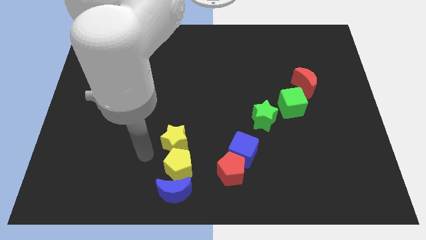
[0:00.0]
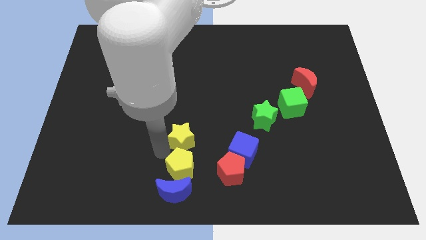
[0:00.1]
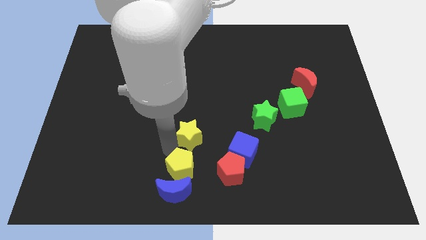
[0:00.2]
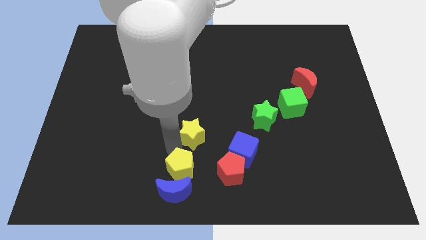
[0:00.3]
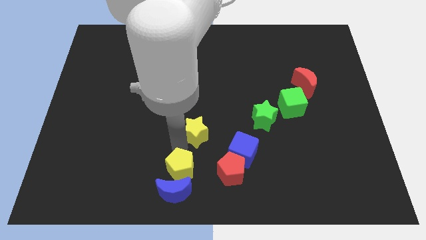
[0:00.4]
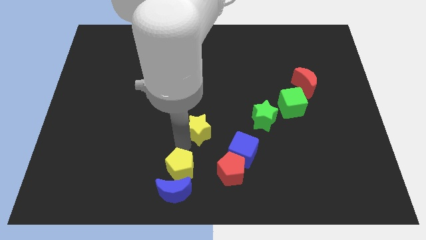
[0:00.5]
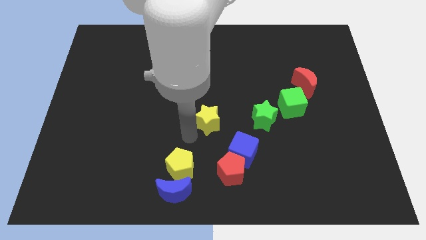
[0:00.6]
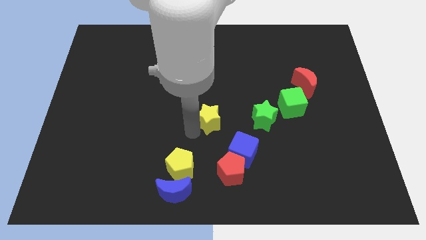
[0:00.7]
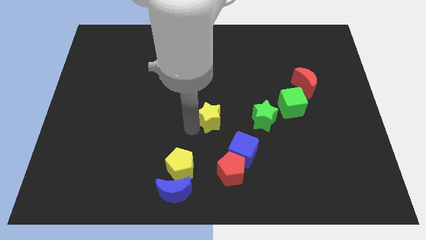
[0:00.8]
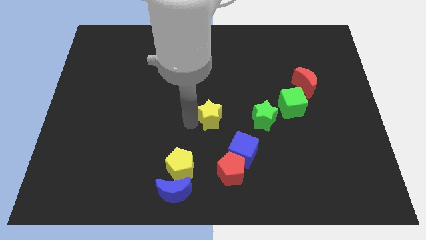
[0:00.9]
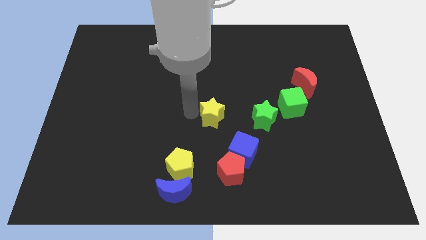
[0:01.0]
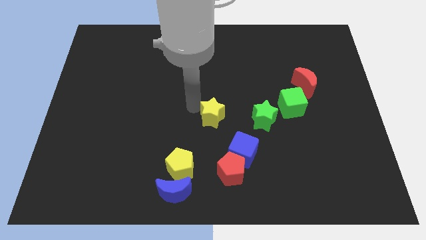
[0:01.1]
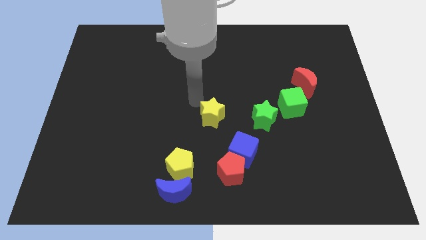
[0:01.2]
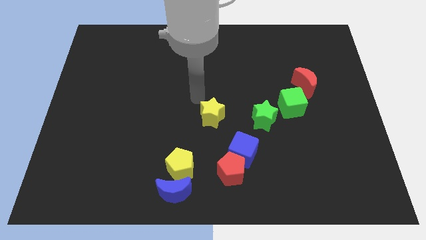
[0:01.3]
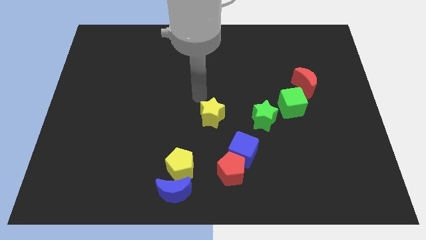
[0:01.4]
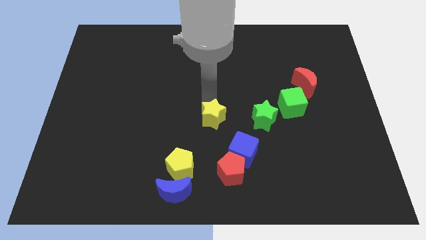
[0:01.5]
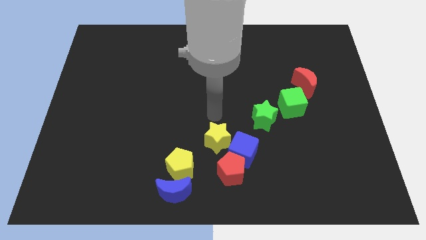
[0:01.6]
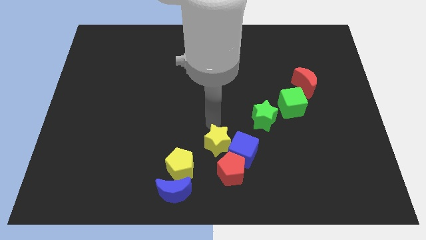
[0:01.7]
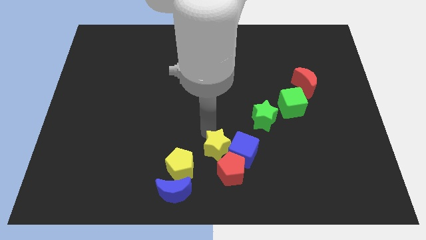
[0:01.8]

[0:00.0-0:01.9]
move yellow star to the left of the blue cube

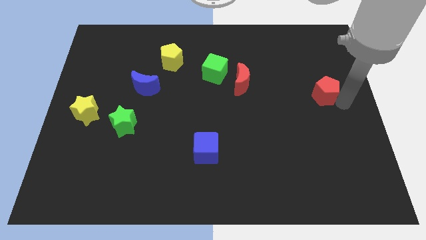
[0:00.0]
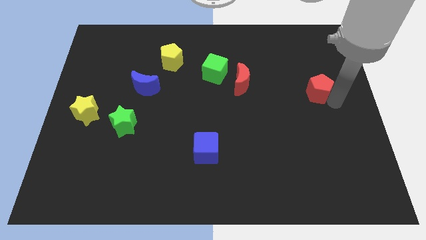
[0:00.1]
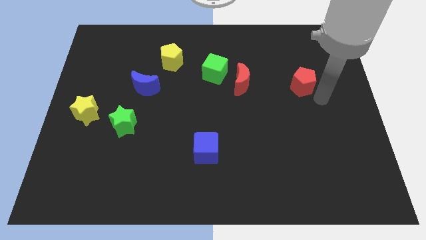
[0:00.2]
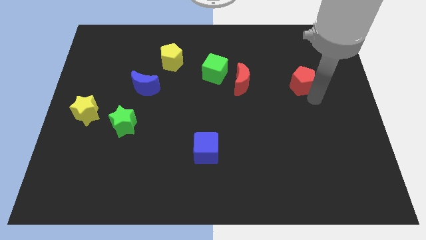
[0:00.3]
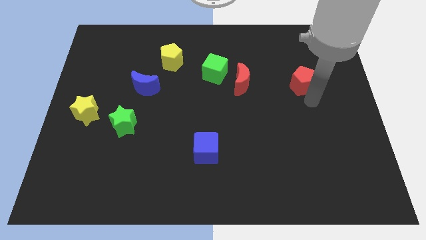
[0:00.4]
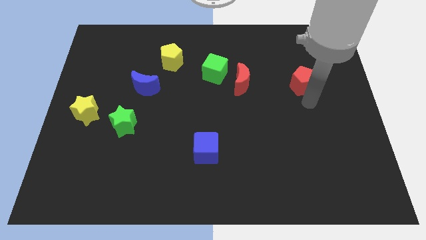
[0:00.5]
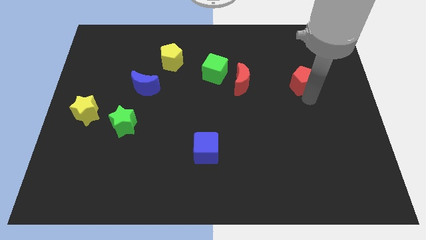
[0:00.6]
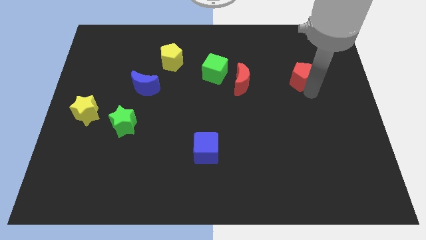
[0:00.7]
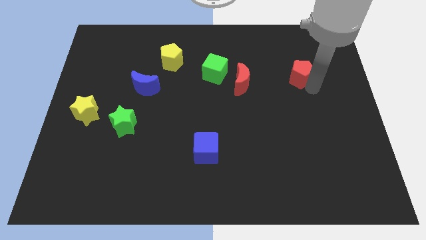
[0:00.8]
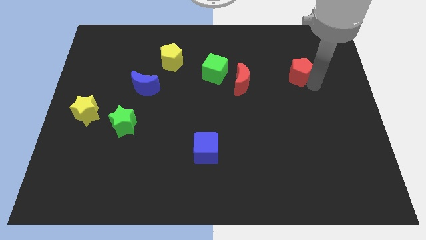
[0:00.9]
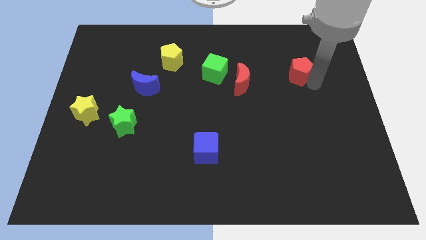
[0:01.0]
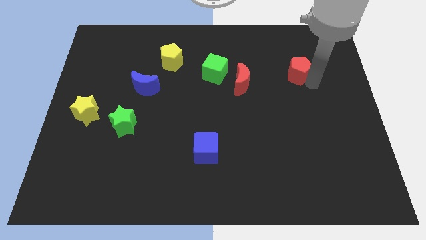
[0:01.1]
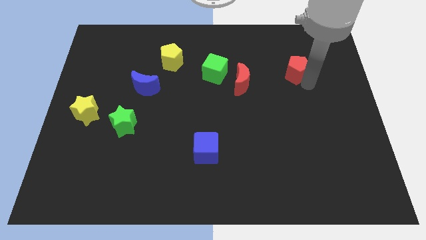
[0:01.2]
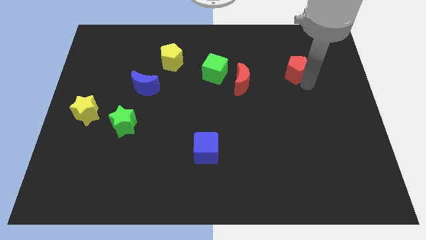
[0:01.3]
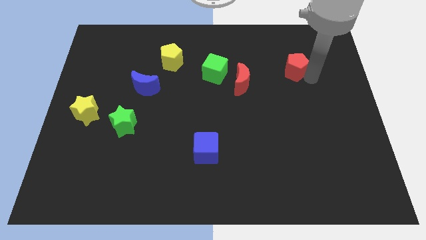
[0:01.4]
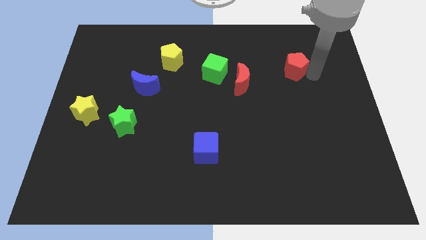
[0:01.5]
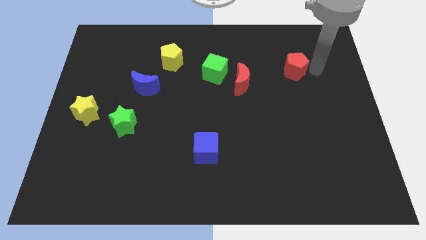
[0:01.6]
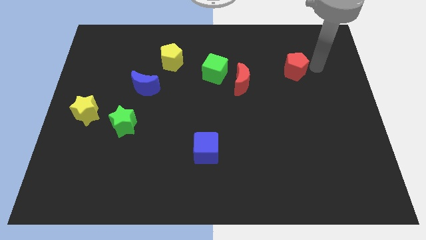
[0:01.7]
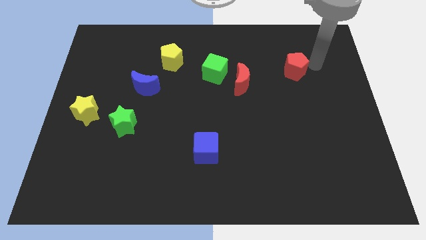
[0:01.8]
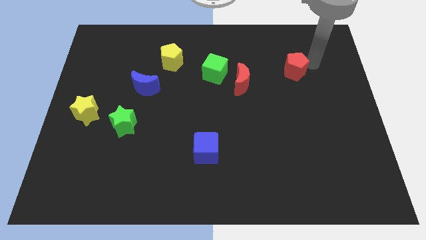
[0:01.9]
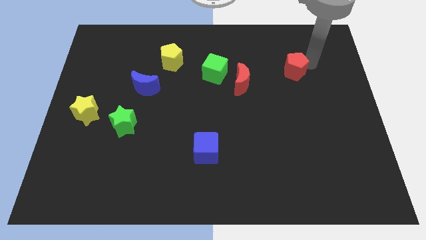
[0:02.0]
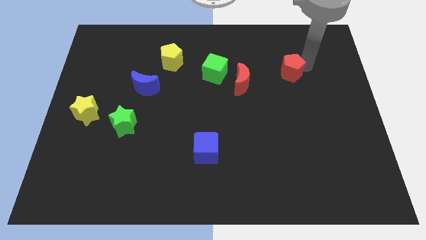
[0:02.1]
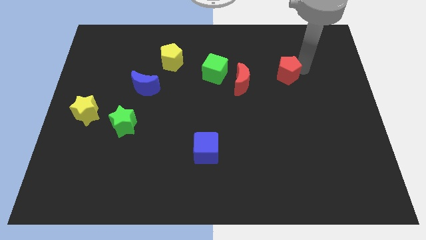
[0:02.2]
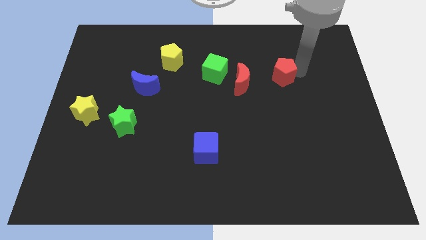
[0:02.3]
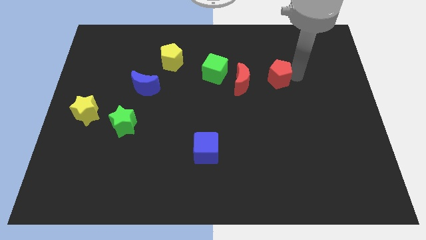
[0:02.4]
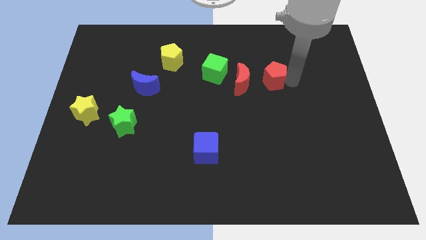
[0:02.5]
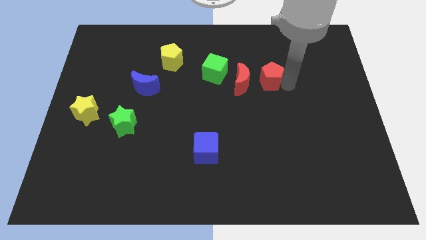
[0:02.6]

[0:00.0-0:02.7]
move the red pentagon near the red crescent

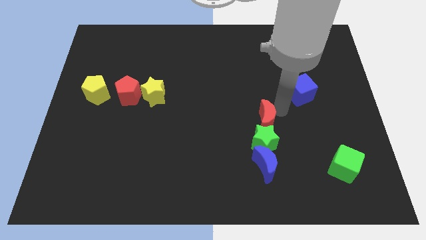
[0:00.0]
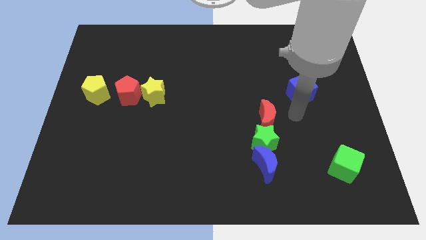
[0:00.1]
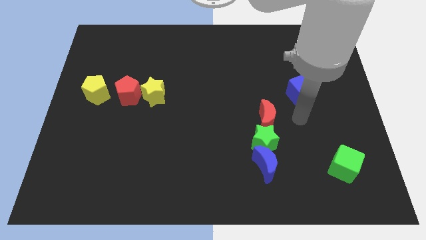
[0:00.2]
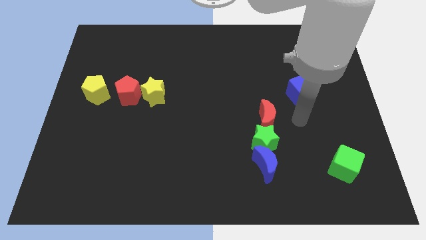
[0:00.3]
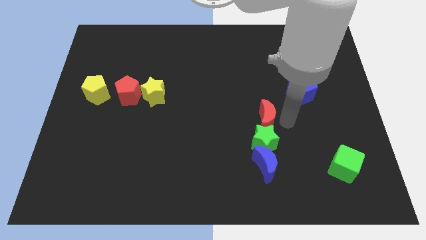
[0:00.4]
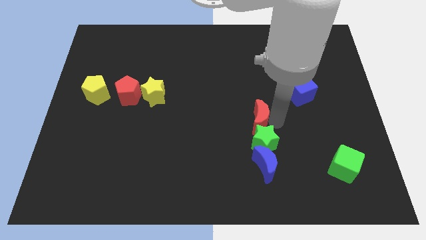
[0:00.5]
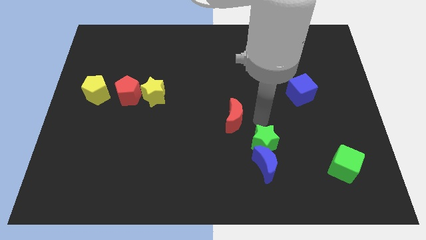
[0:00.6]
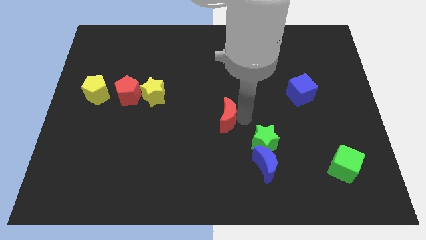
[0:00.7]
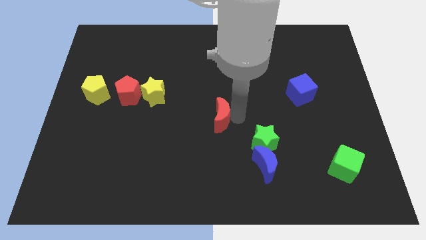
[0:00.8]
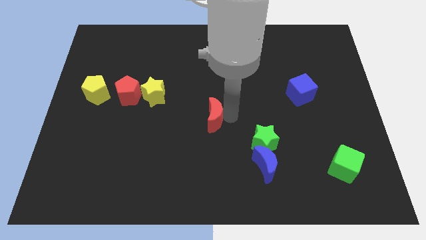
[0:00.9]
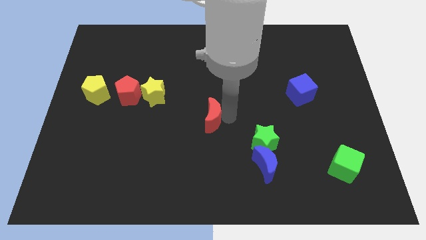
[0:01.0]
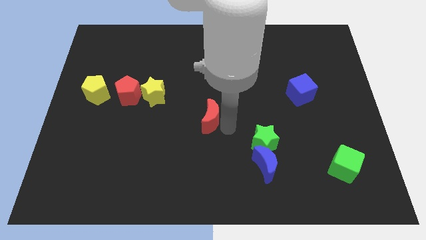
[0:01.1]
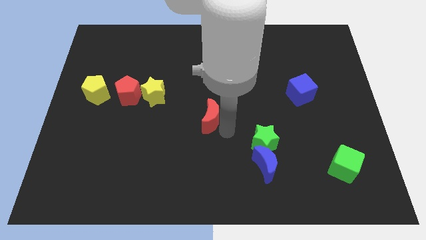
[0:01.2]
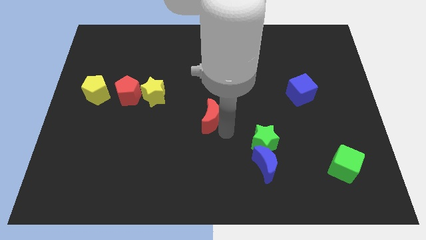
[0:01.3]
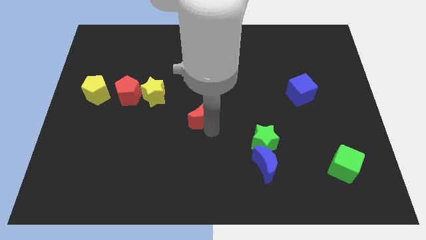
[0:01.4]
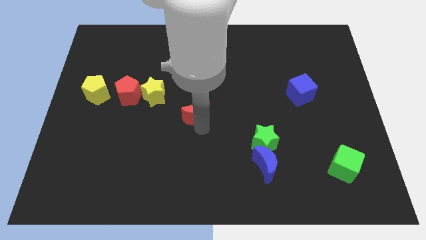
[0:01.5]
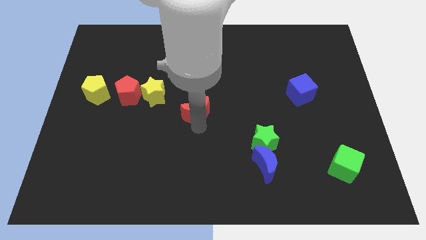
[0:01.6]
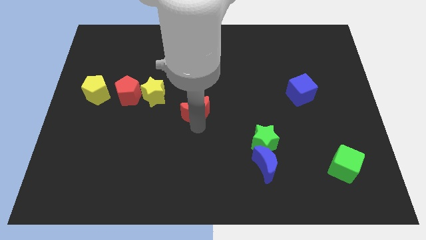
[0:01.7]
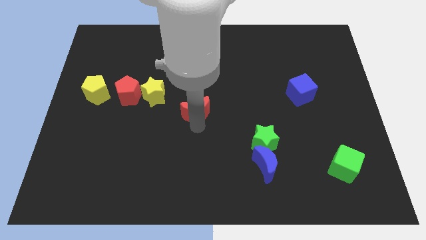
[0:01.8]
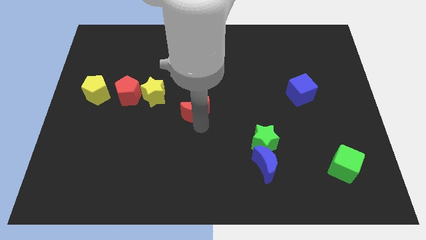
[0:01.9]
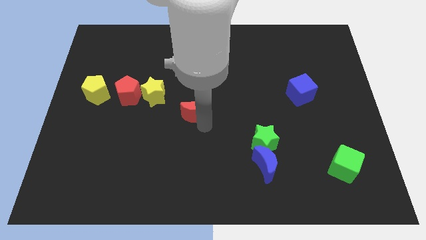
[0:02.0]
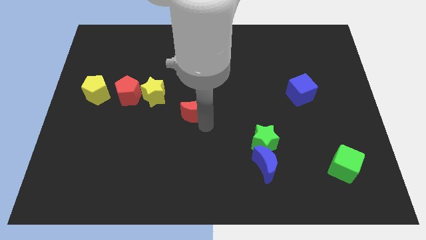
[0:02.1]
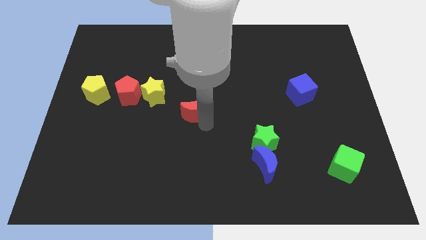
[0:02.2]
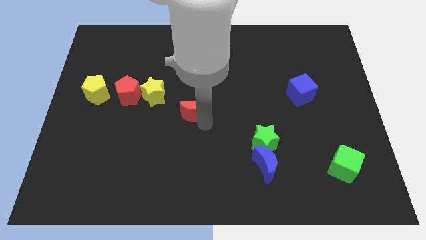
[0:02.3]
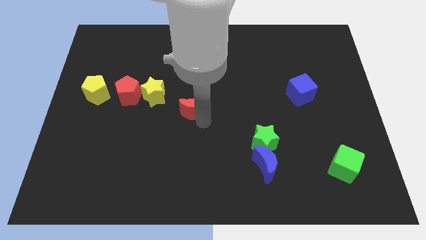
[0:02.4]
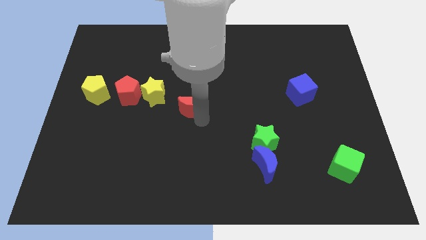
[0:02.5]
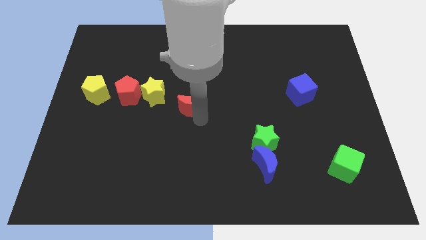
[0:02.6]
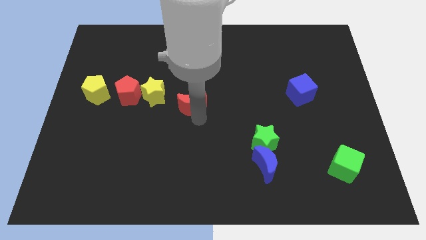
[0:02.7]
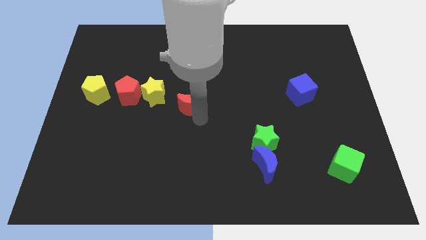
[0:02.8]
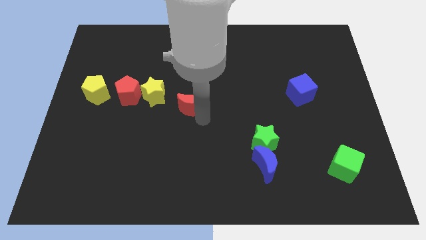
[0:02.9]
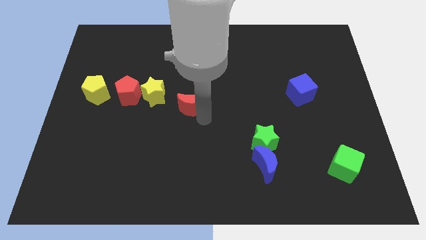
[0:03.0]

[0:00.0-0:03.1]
move the red crescent towards the yellow star

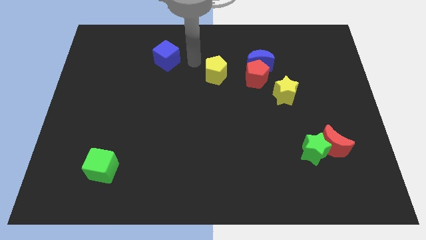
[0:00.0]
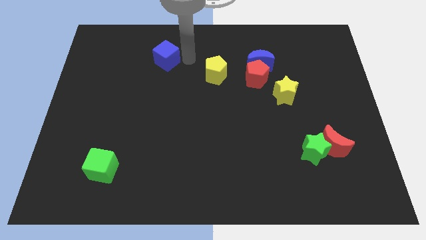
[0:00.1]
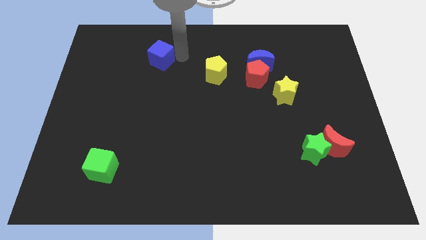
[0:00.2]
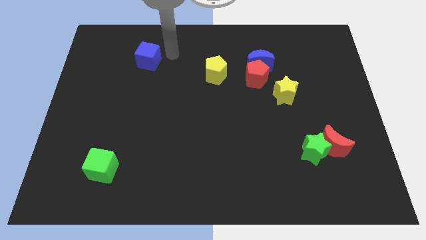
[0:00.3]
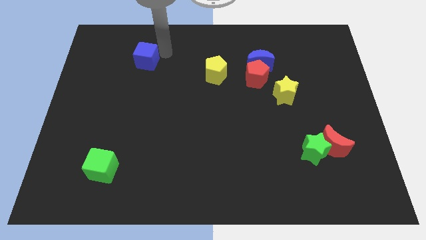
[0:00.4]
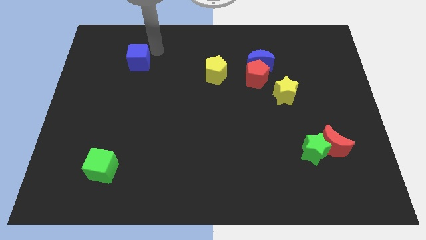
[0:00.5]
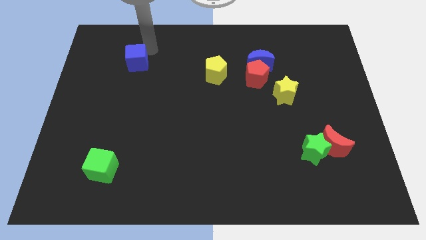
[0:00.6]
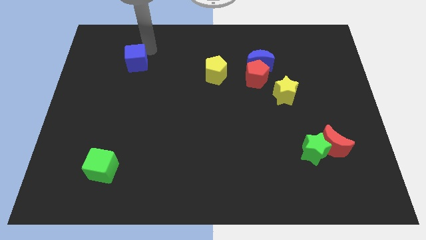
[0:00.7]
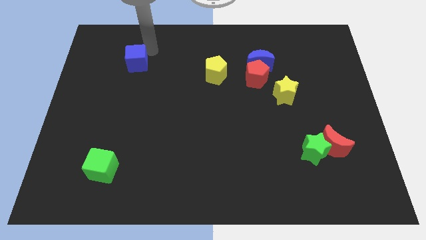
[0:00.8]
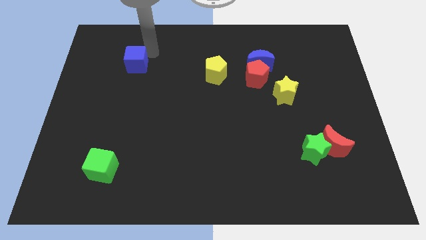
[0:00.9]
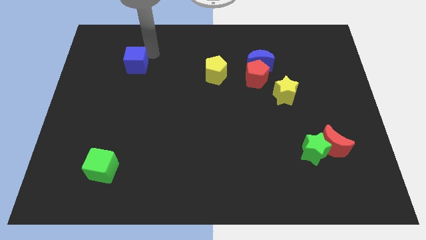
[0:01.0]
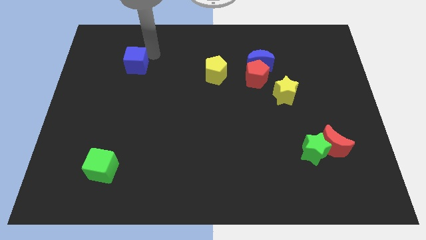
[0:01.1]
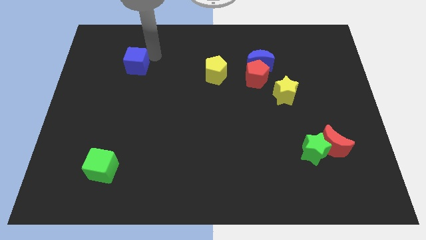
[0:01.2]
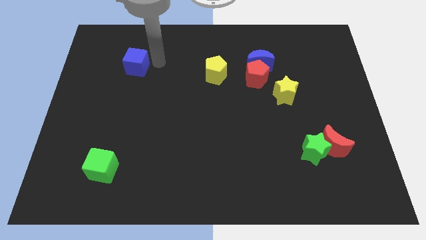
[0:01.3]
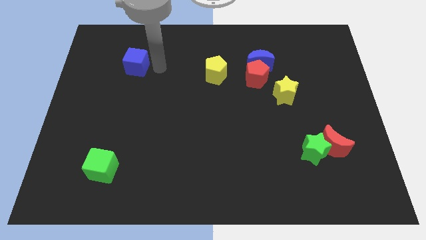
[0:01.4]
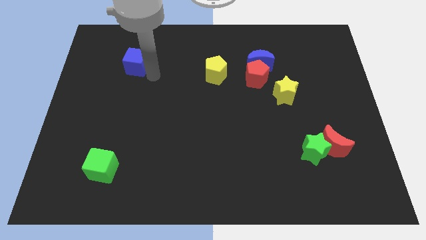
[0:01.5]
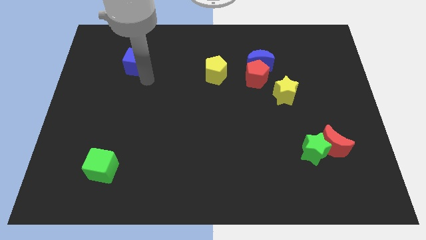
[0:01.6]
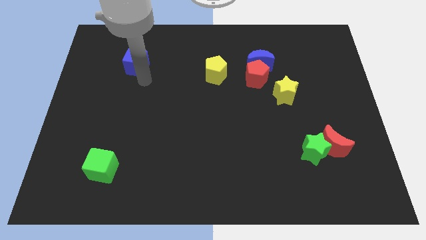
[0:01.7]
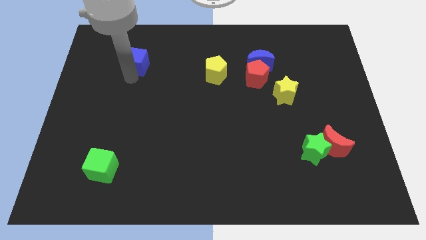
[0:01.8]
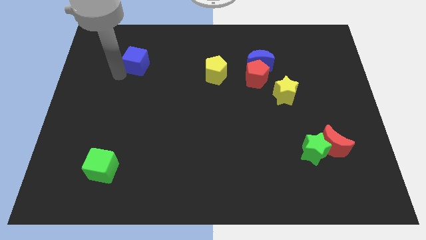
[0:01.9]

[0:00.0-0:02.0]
push the blue cube slightly to the left
